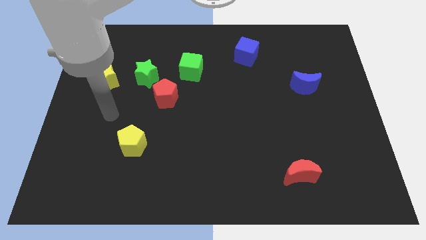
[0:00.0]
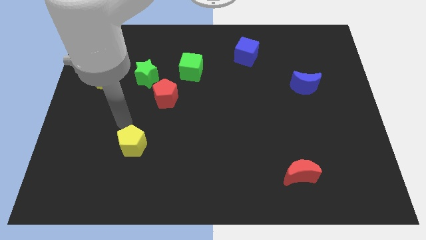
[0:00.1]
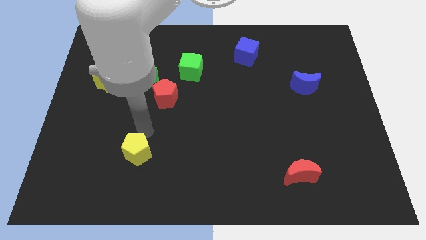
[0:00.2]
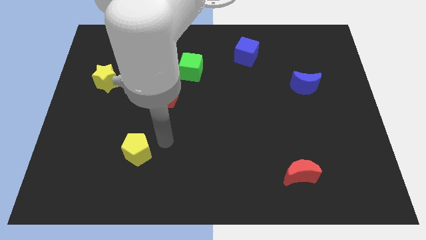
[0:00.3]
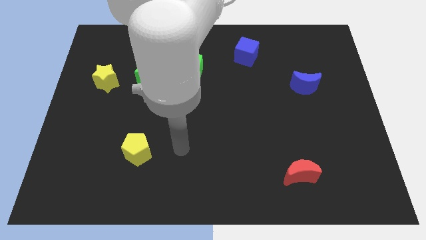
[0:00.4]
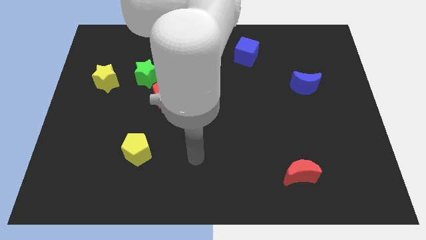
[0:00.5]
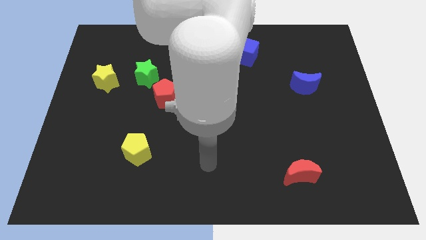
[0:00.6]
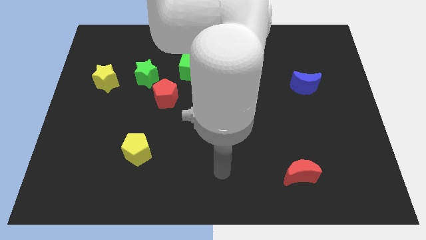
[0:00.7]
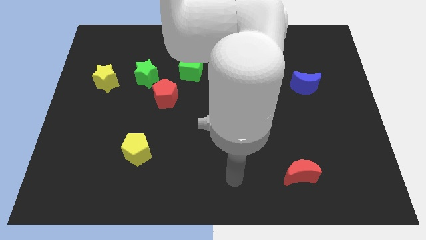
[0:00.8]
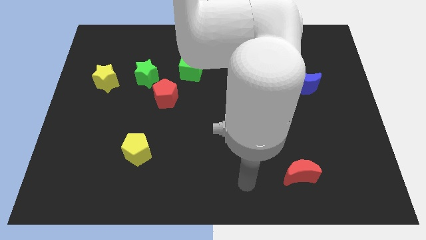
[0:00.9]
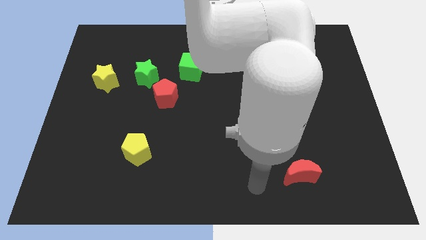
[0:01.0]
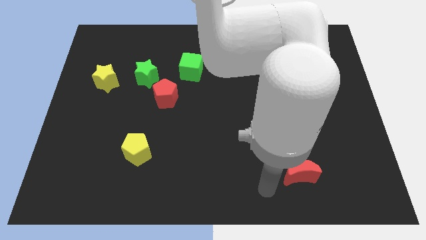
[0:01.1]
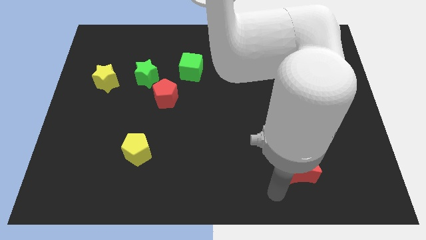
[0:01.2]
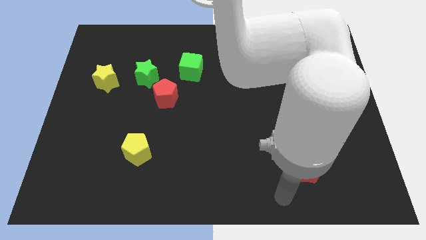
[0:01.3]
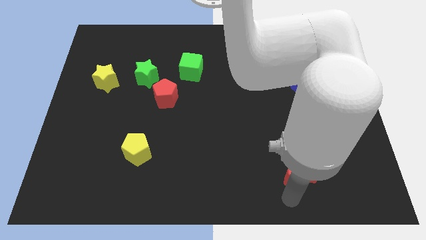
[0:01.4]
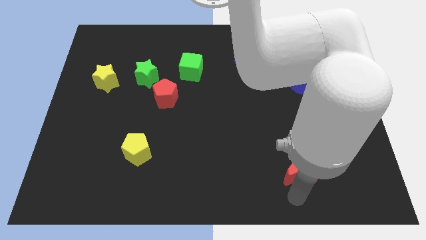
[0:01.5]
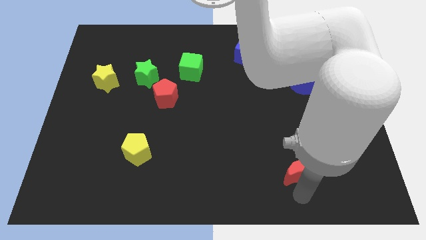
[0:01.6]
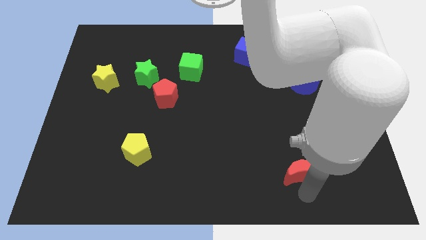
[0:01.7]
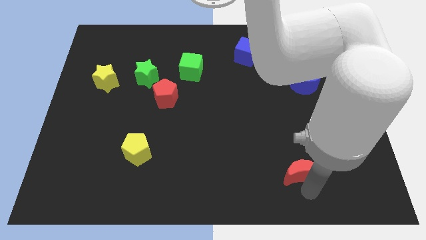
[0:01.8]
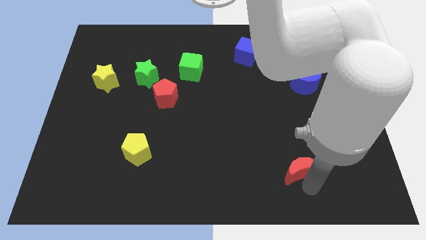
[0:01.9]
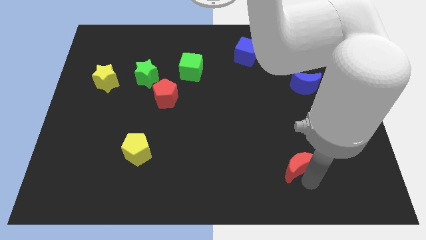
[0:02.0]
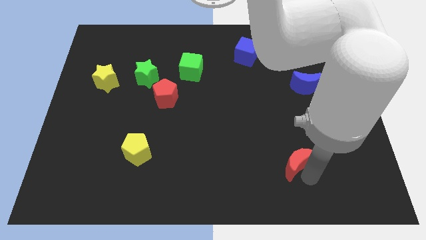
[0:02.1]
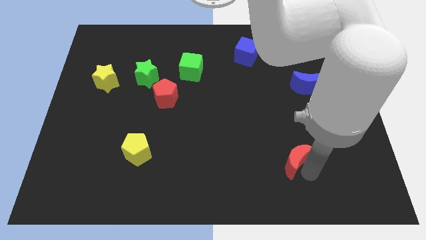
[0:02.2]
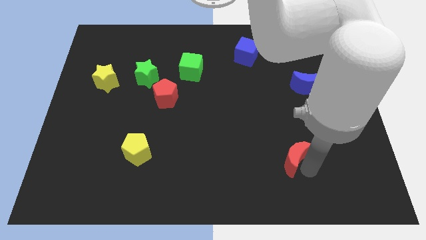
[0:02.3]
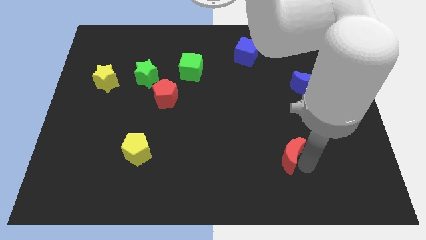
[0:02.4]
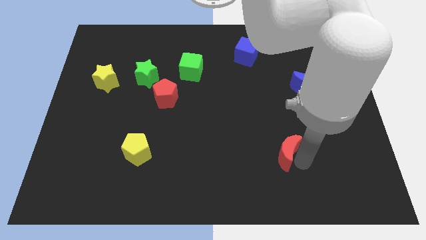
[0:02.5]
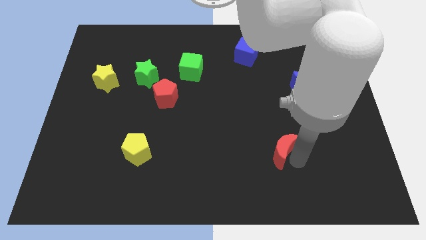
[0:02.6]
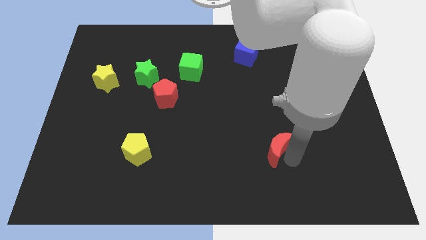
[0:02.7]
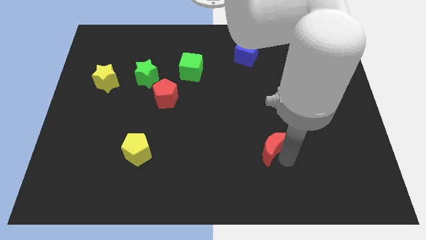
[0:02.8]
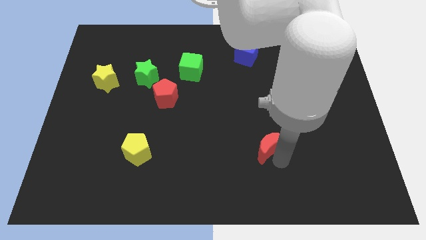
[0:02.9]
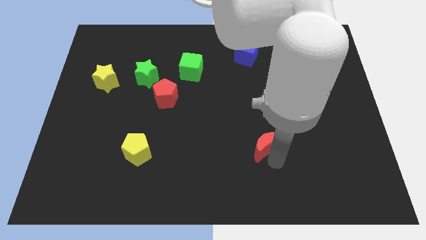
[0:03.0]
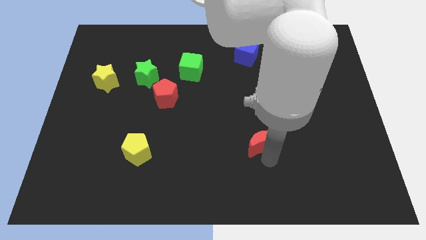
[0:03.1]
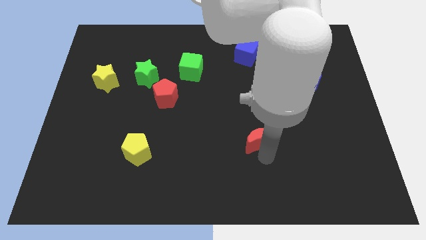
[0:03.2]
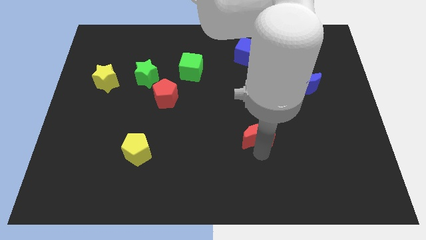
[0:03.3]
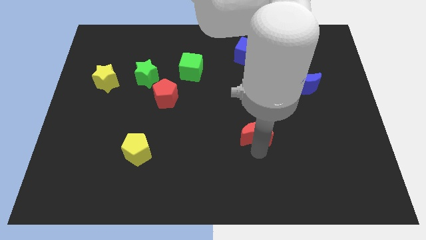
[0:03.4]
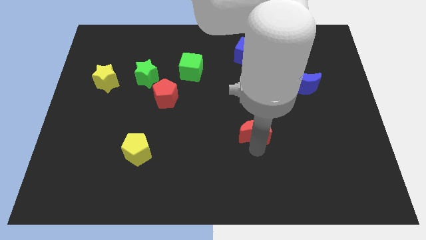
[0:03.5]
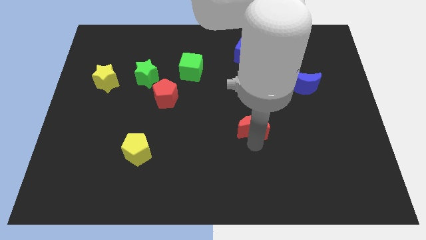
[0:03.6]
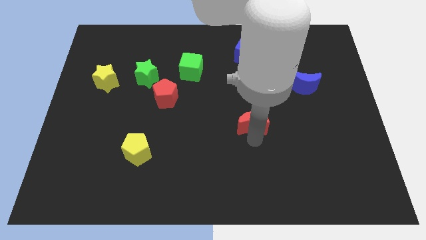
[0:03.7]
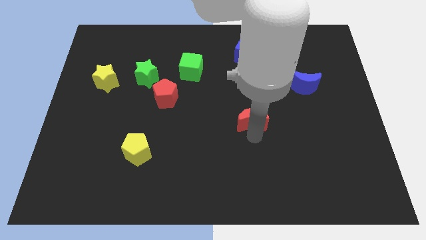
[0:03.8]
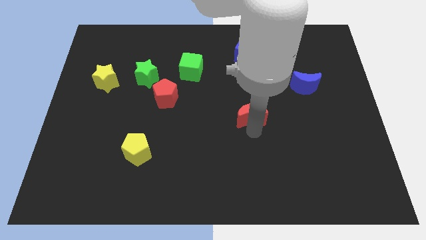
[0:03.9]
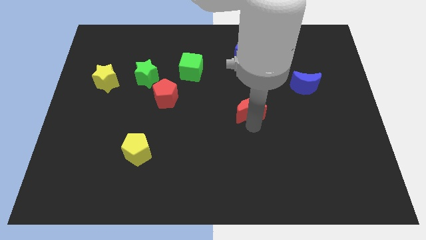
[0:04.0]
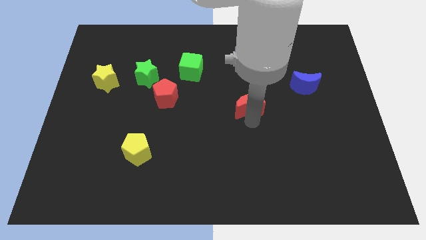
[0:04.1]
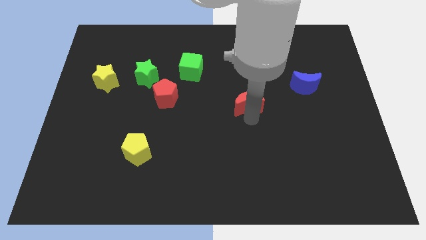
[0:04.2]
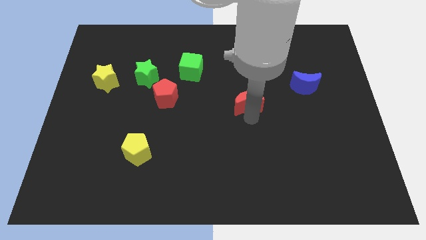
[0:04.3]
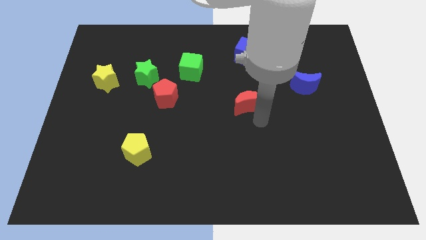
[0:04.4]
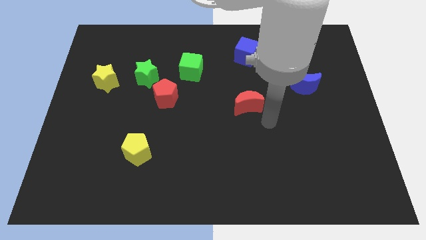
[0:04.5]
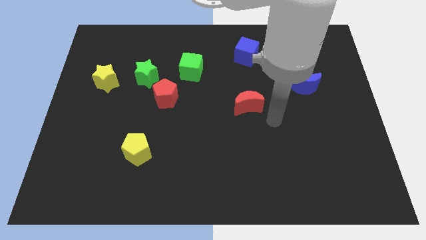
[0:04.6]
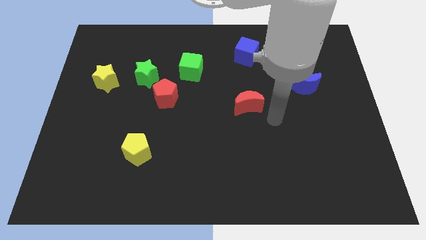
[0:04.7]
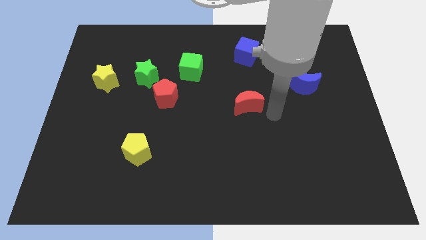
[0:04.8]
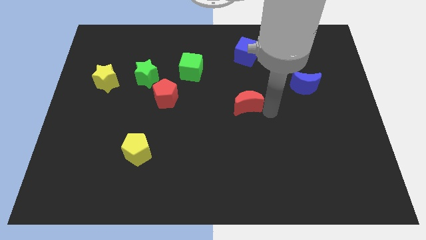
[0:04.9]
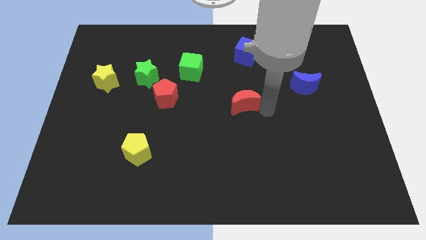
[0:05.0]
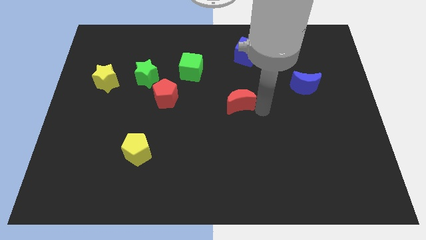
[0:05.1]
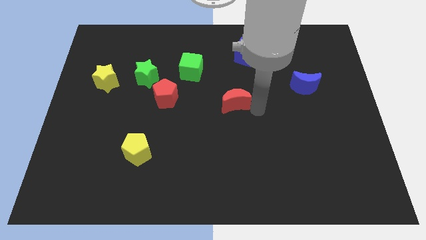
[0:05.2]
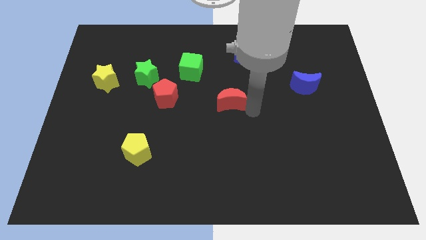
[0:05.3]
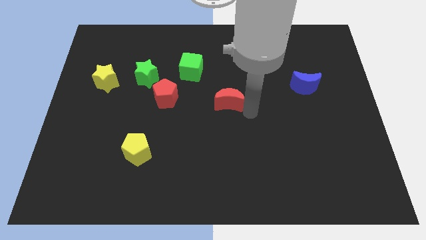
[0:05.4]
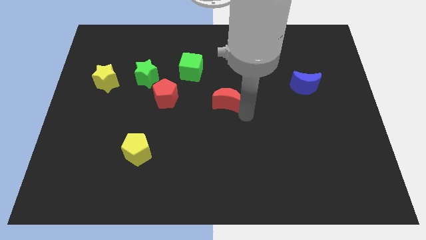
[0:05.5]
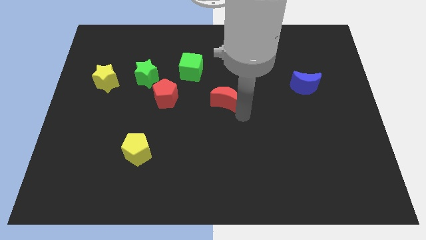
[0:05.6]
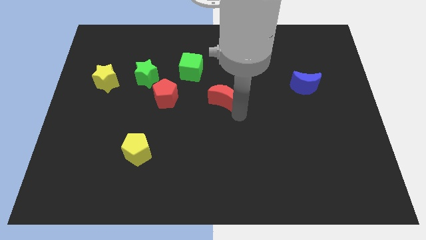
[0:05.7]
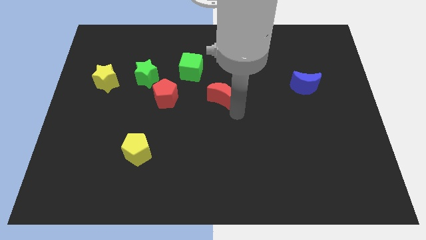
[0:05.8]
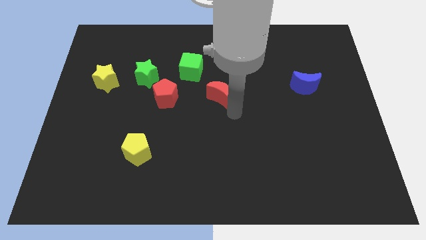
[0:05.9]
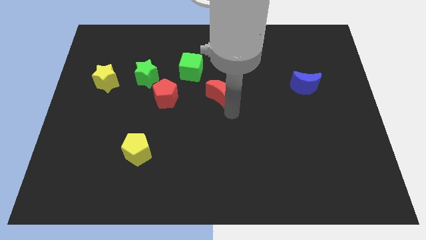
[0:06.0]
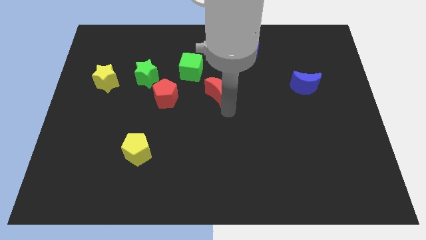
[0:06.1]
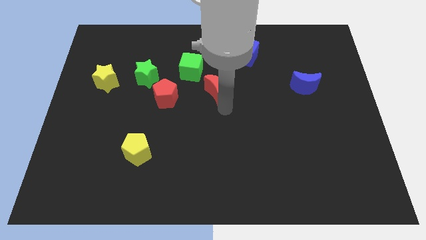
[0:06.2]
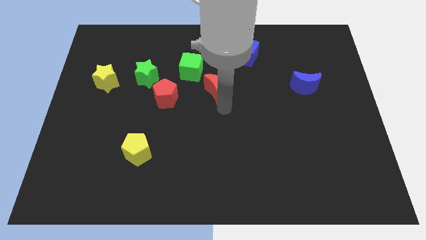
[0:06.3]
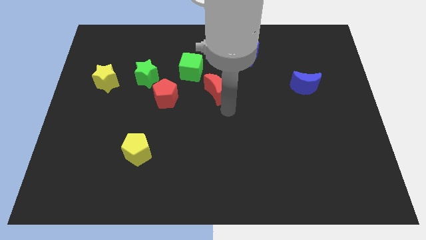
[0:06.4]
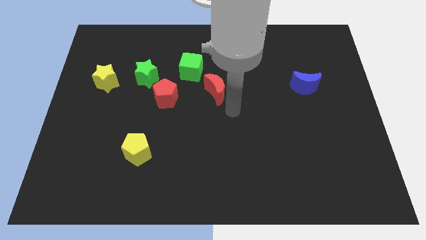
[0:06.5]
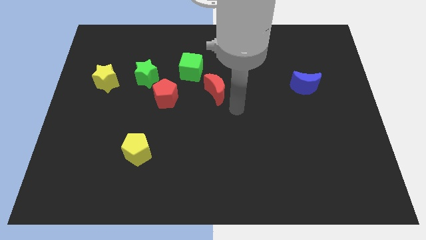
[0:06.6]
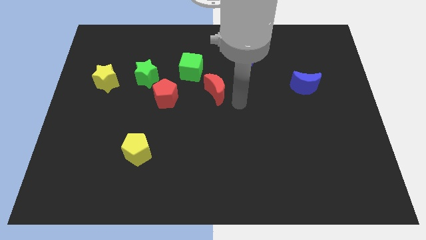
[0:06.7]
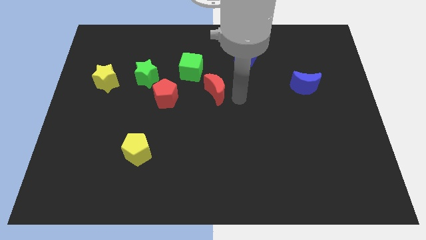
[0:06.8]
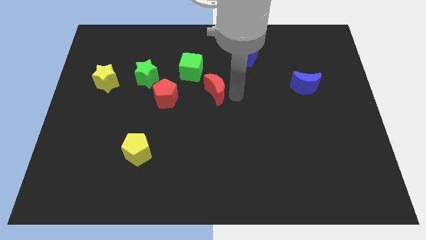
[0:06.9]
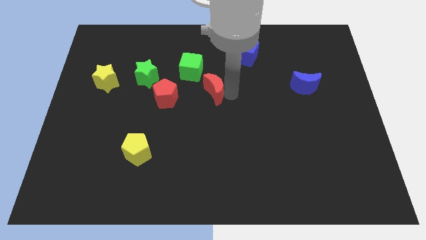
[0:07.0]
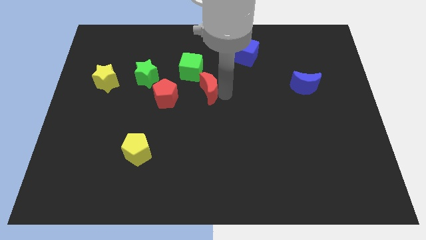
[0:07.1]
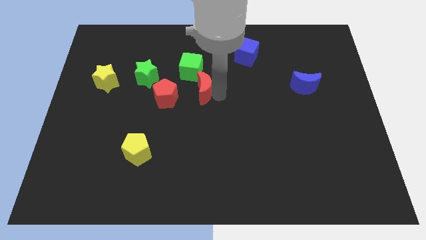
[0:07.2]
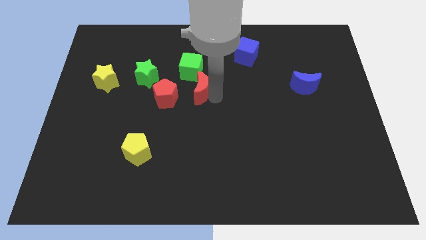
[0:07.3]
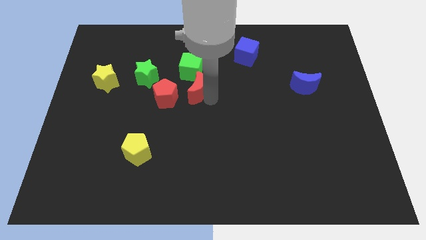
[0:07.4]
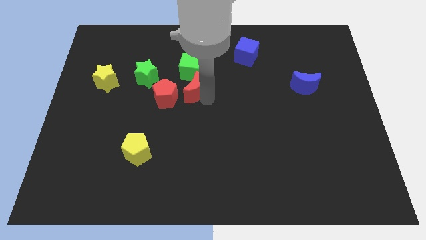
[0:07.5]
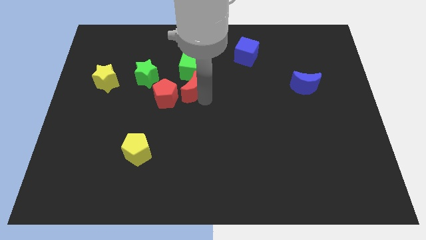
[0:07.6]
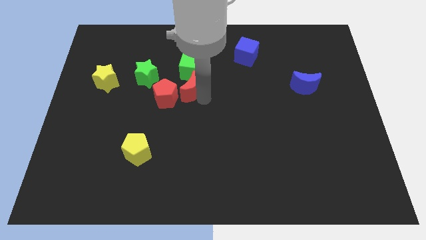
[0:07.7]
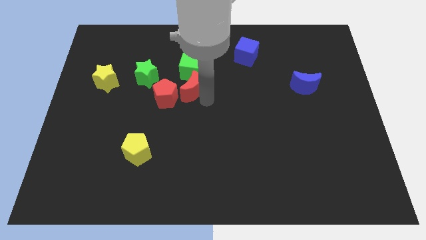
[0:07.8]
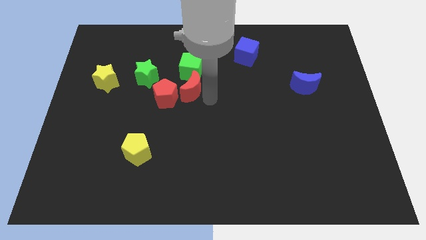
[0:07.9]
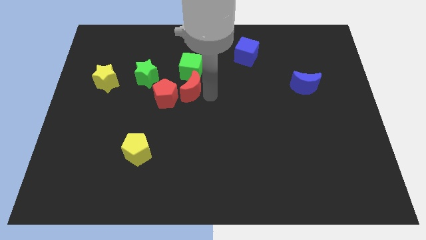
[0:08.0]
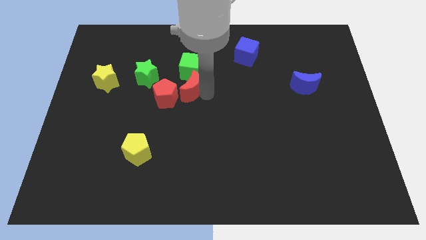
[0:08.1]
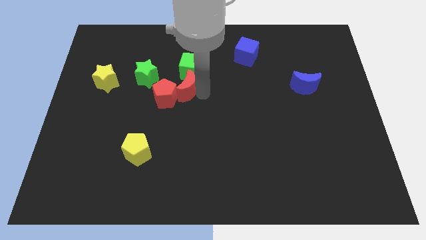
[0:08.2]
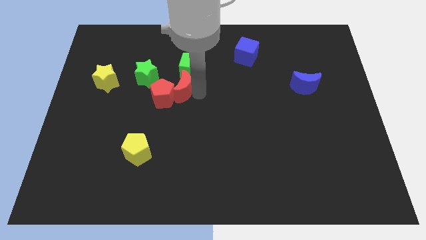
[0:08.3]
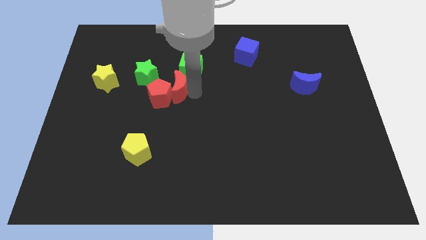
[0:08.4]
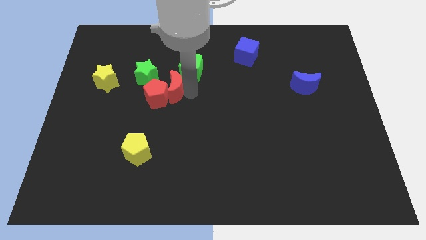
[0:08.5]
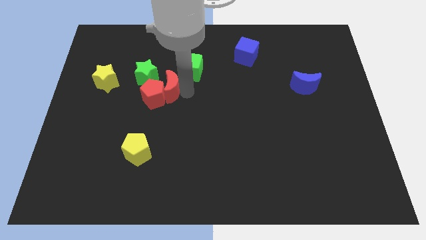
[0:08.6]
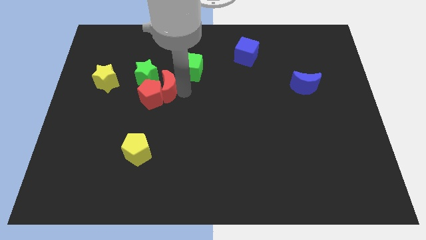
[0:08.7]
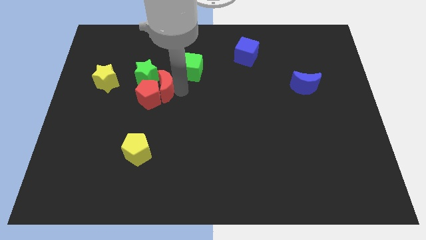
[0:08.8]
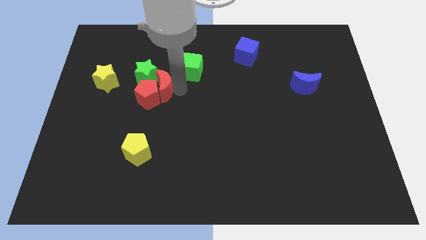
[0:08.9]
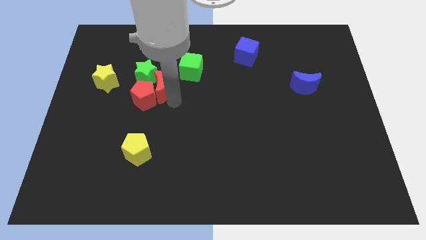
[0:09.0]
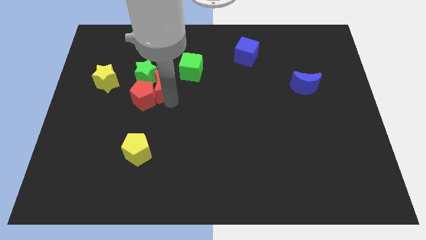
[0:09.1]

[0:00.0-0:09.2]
push the red moon to the green star
